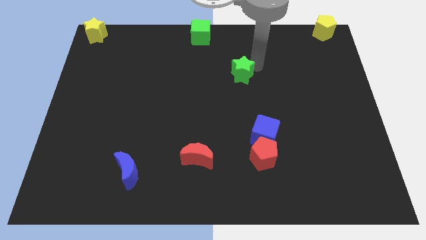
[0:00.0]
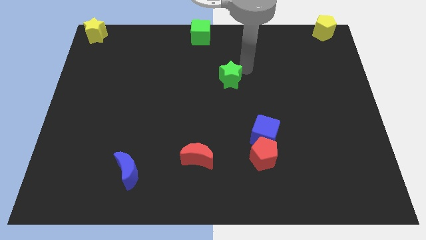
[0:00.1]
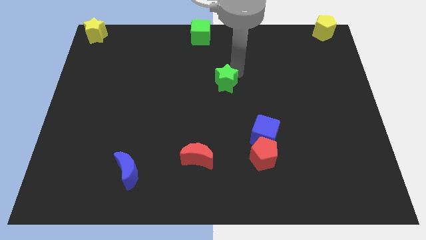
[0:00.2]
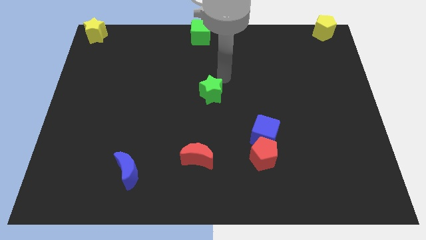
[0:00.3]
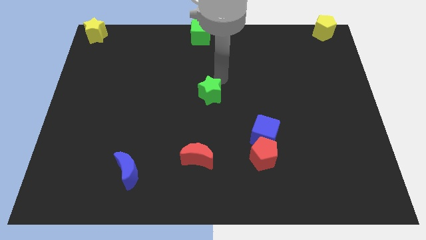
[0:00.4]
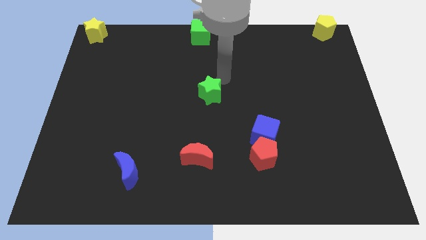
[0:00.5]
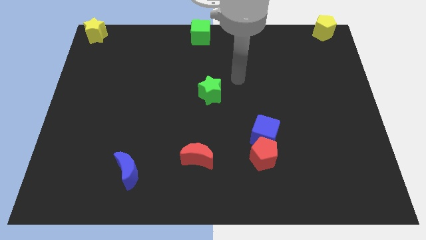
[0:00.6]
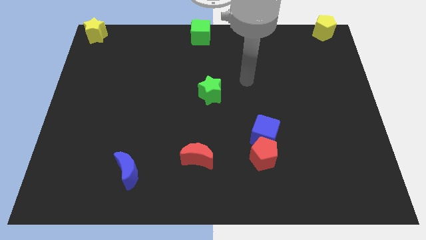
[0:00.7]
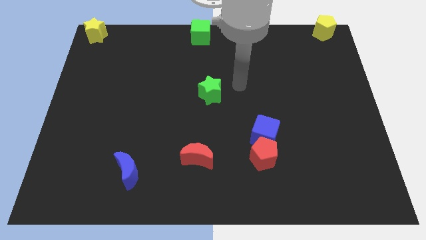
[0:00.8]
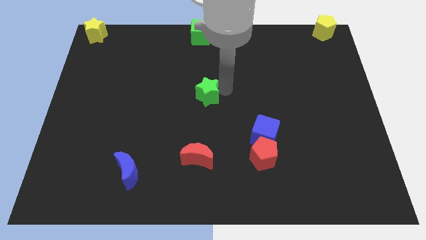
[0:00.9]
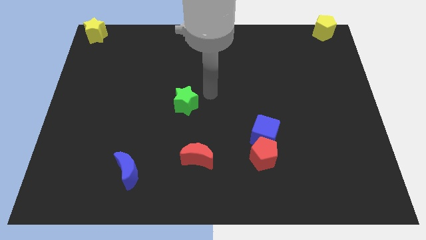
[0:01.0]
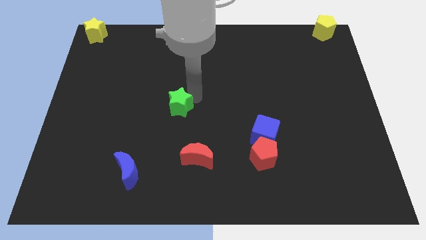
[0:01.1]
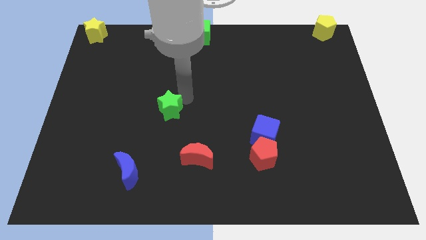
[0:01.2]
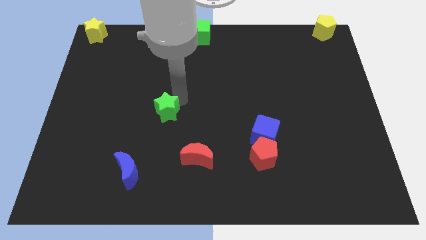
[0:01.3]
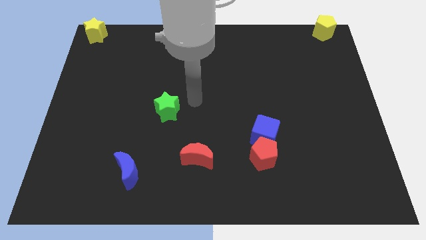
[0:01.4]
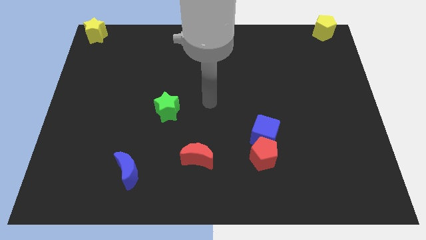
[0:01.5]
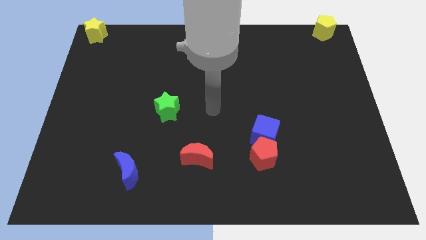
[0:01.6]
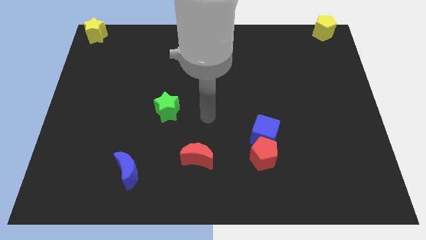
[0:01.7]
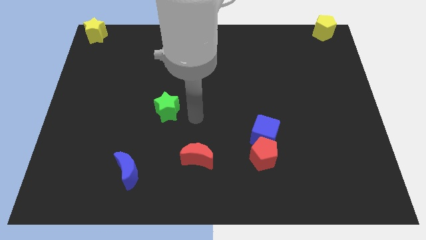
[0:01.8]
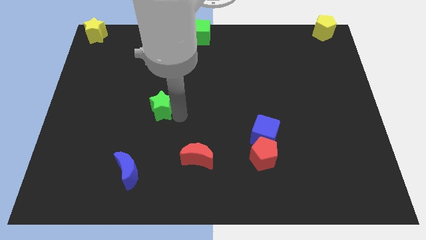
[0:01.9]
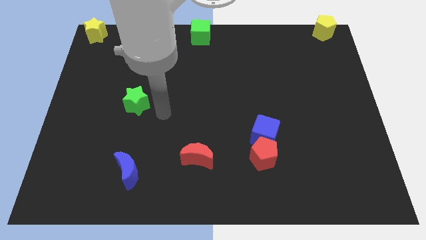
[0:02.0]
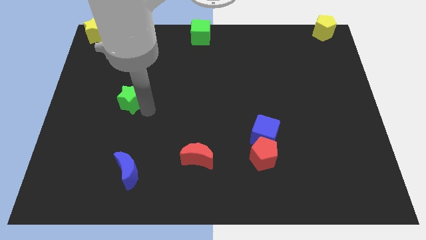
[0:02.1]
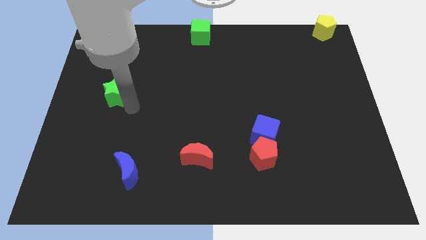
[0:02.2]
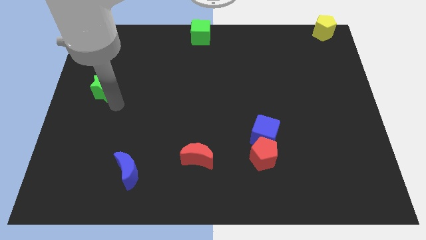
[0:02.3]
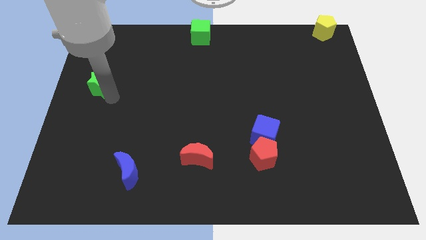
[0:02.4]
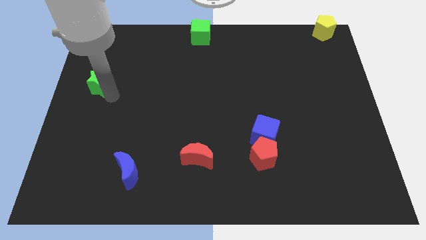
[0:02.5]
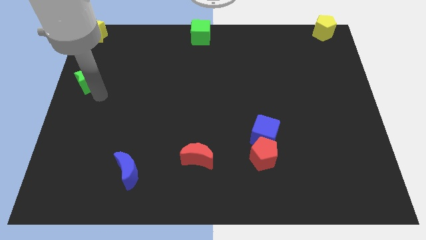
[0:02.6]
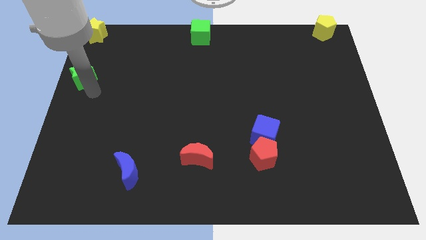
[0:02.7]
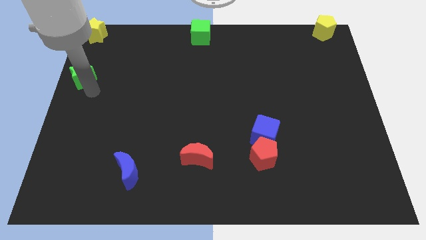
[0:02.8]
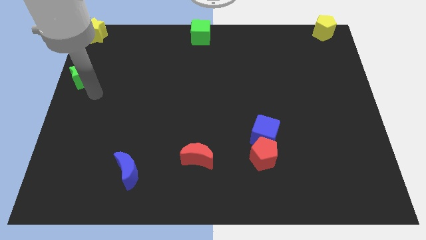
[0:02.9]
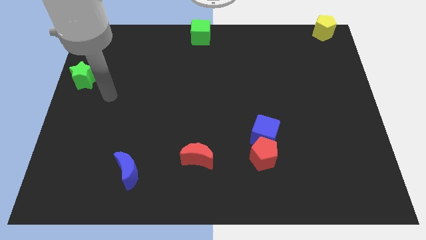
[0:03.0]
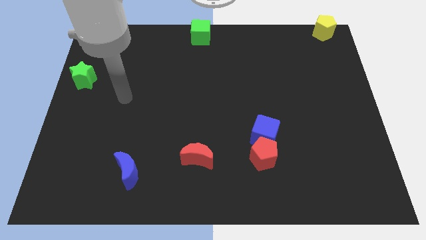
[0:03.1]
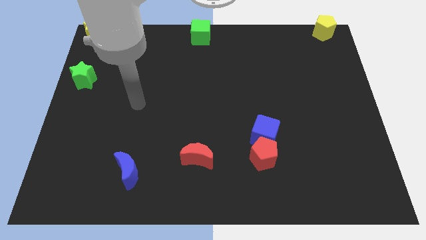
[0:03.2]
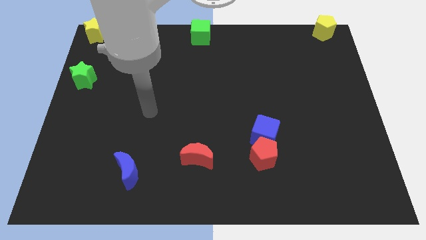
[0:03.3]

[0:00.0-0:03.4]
place the green star below the yellow star

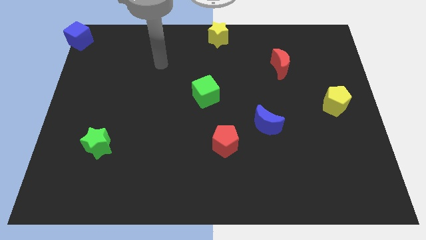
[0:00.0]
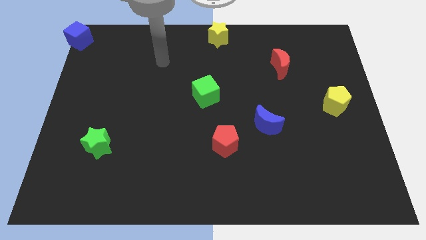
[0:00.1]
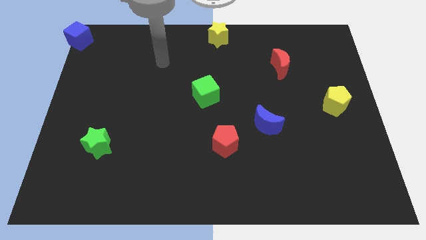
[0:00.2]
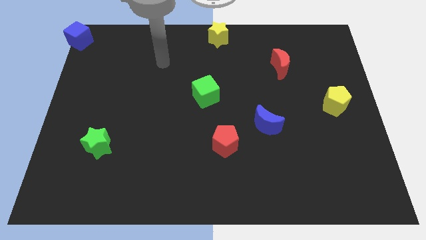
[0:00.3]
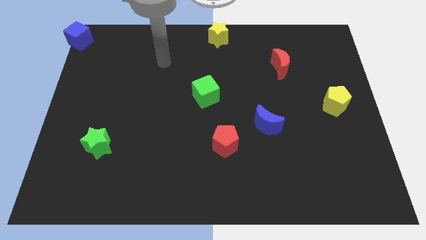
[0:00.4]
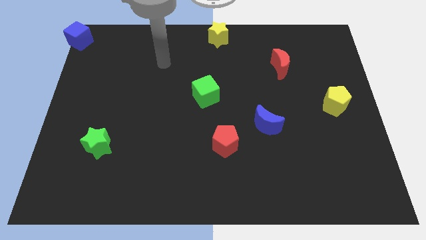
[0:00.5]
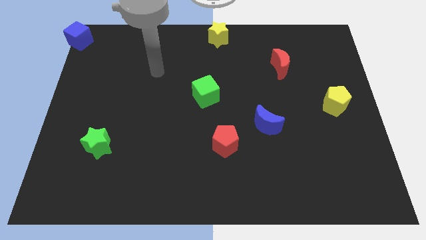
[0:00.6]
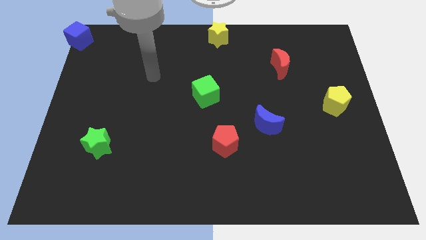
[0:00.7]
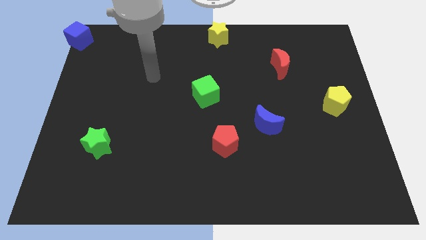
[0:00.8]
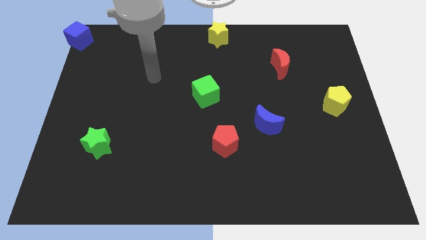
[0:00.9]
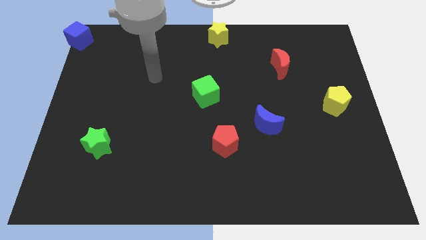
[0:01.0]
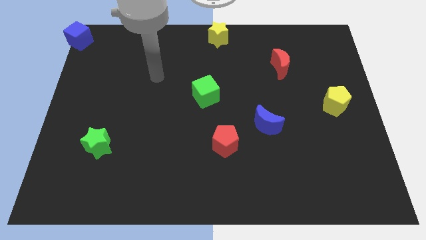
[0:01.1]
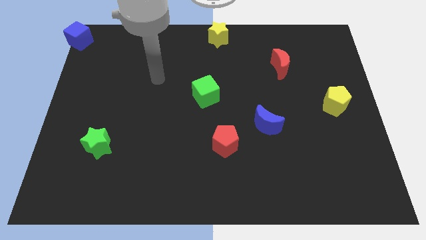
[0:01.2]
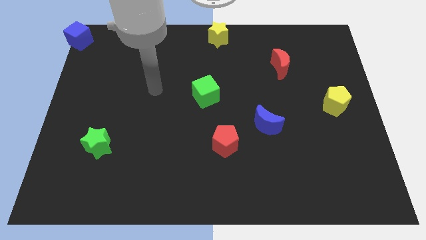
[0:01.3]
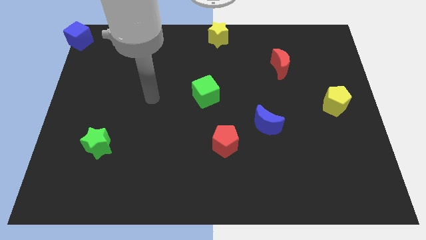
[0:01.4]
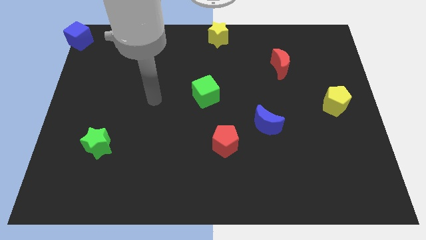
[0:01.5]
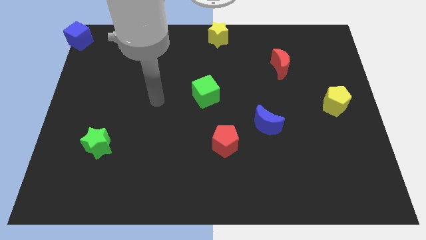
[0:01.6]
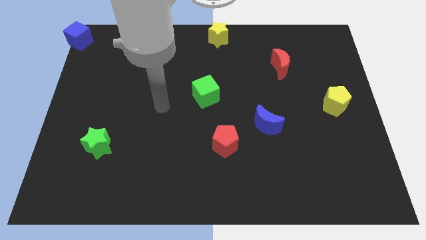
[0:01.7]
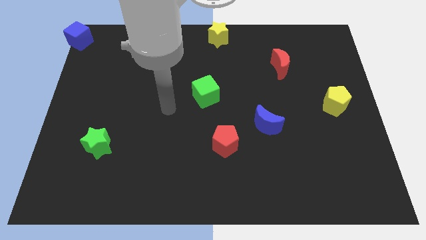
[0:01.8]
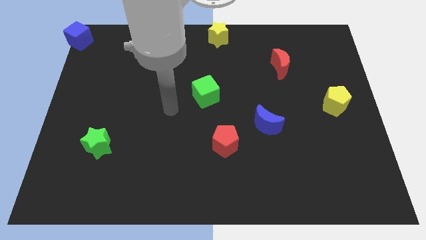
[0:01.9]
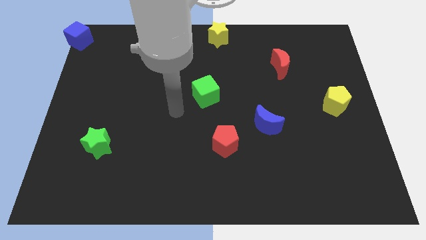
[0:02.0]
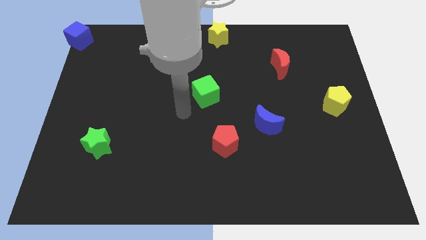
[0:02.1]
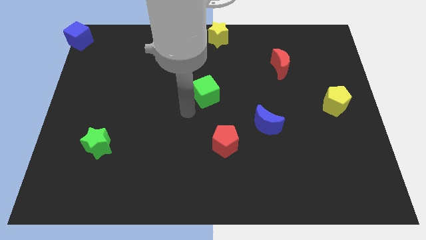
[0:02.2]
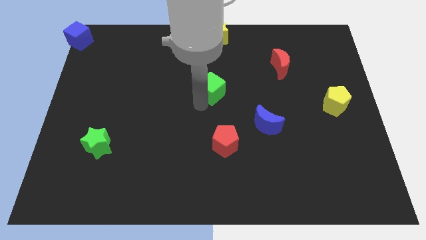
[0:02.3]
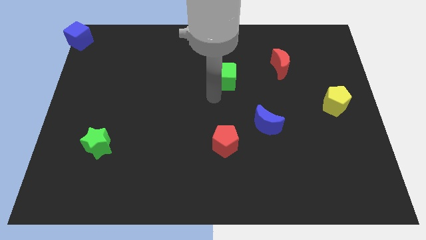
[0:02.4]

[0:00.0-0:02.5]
place the green cube vertically above the red pentagon

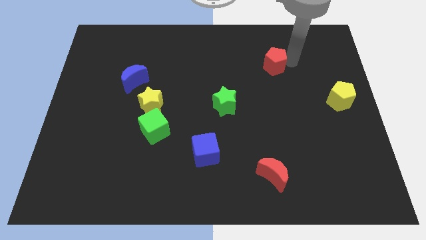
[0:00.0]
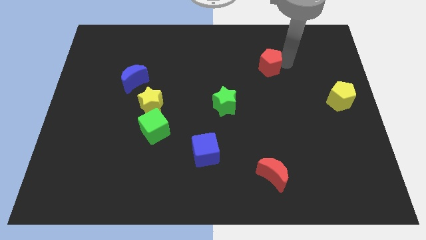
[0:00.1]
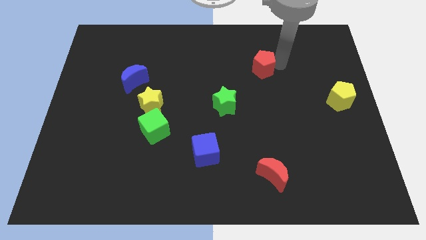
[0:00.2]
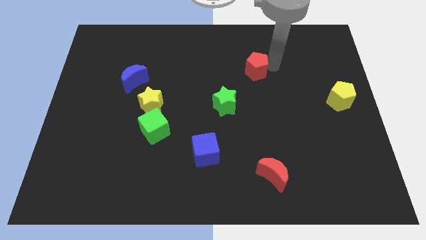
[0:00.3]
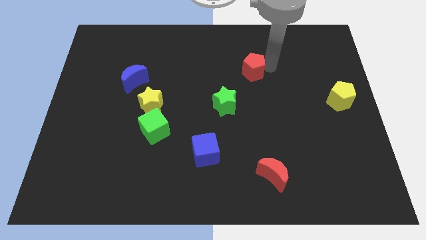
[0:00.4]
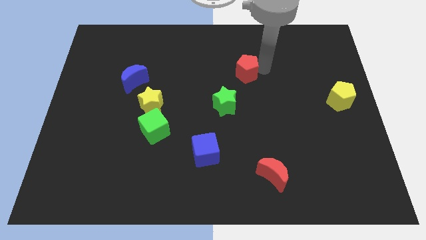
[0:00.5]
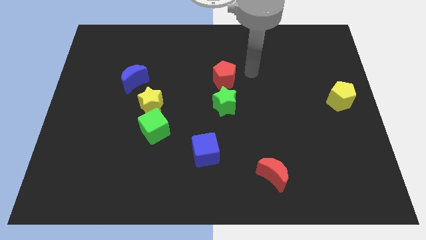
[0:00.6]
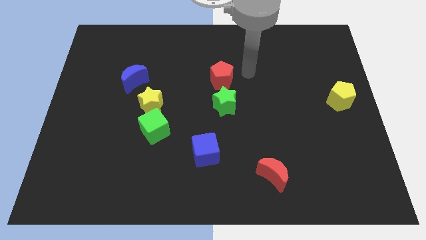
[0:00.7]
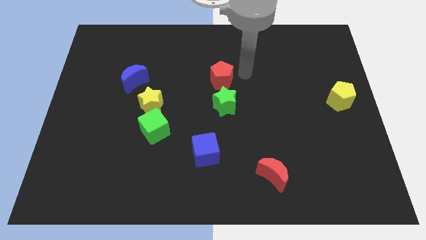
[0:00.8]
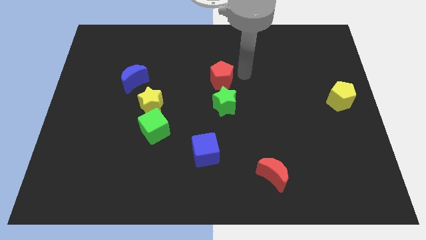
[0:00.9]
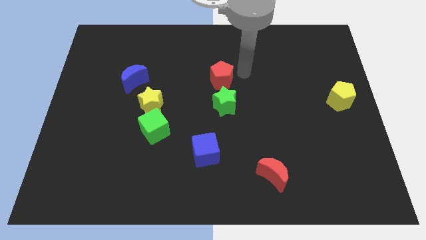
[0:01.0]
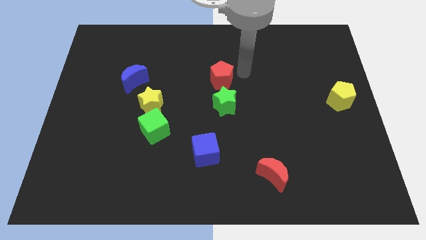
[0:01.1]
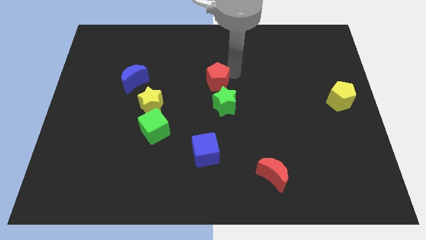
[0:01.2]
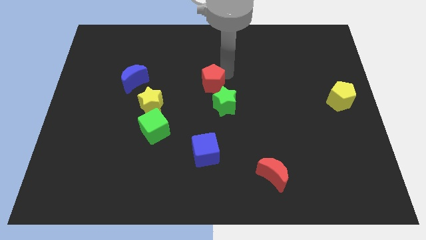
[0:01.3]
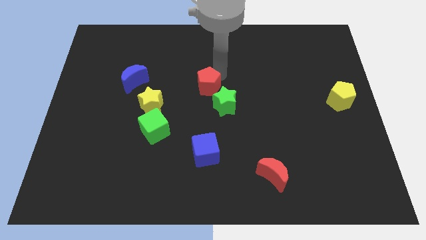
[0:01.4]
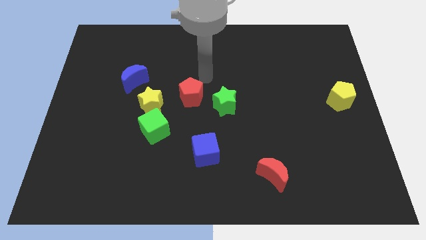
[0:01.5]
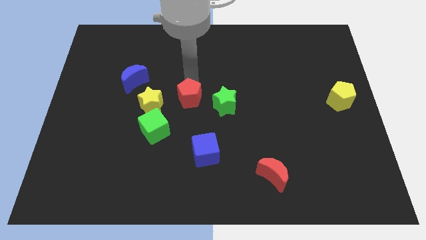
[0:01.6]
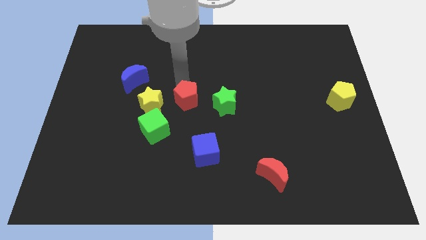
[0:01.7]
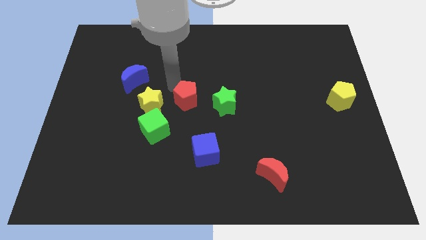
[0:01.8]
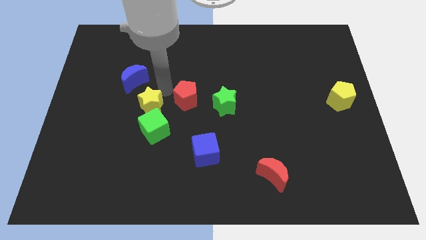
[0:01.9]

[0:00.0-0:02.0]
move the red pentagon between green and yellow stars

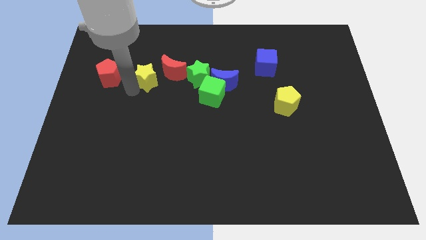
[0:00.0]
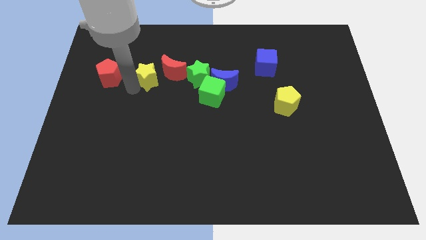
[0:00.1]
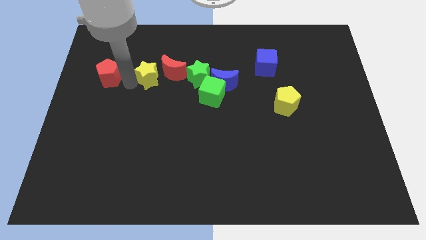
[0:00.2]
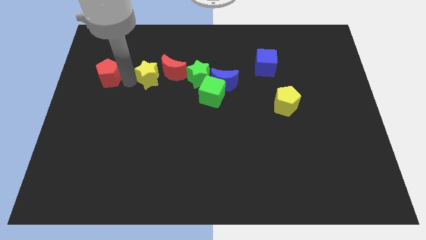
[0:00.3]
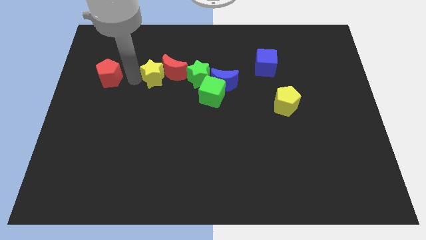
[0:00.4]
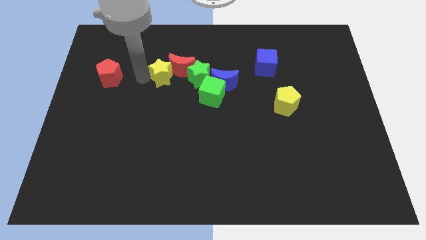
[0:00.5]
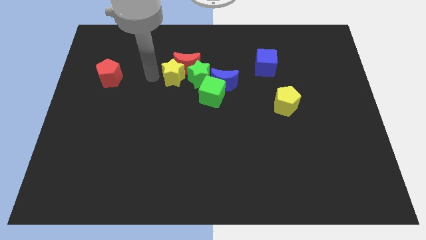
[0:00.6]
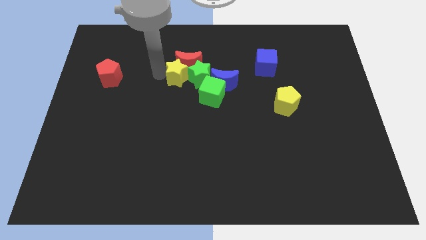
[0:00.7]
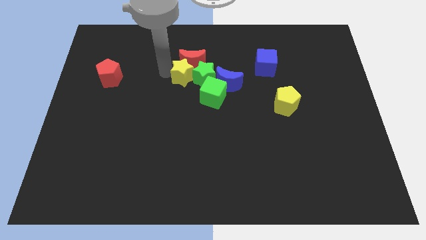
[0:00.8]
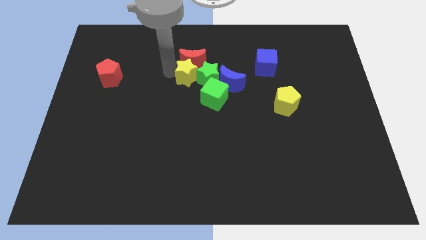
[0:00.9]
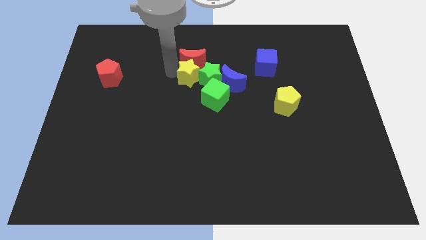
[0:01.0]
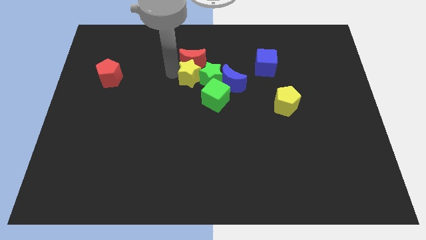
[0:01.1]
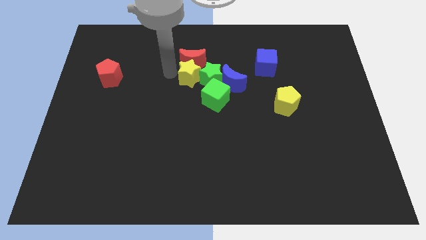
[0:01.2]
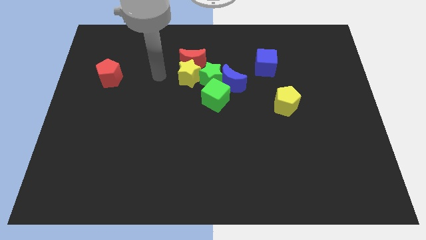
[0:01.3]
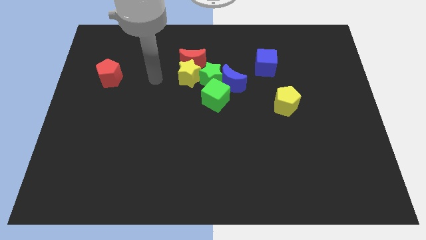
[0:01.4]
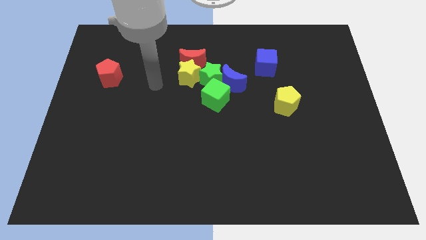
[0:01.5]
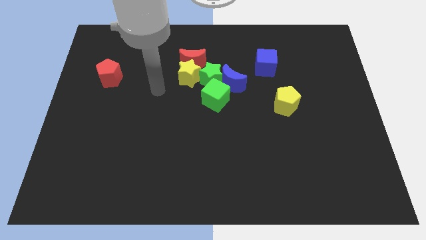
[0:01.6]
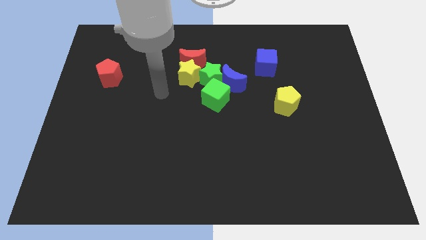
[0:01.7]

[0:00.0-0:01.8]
slide the star to the bottom of the red moon
